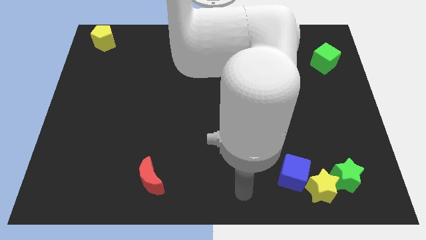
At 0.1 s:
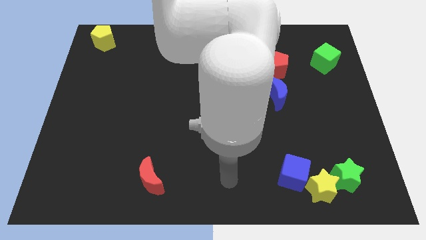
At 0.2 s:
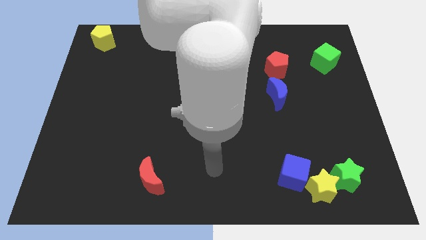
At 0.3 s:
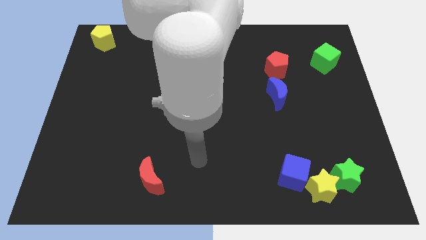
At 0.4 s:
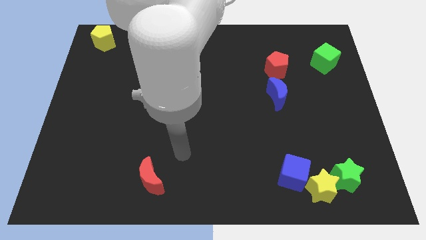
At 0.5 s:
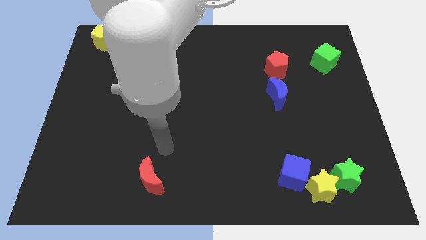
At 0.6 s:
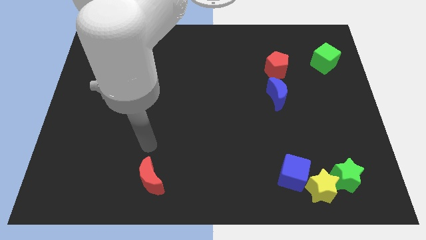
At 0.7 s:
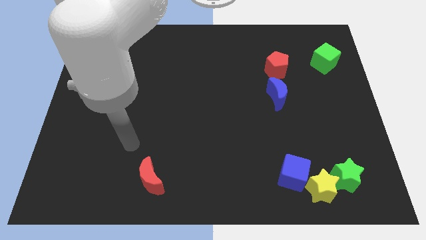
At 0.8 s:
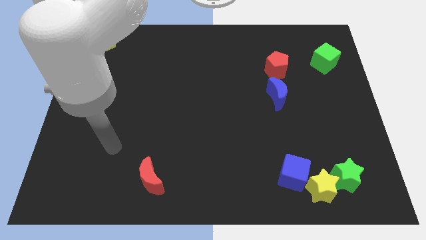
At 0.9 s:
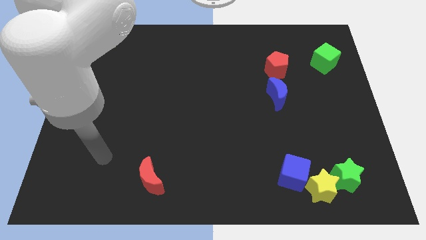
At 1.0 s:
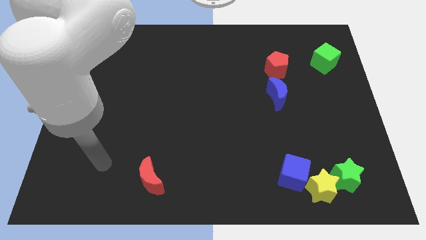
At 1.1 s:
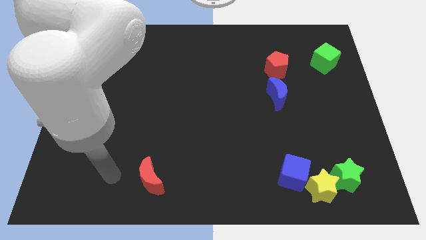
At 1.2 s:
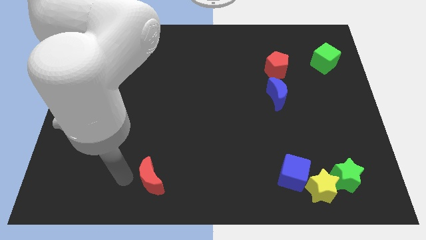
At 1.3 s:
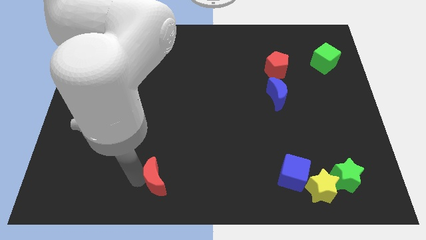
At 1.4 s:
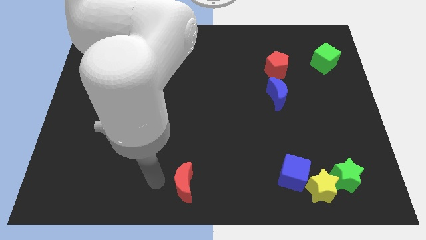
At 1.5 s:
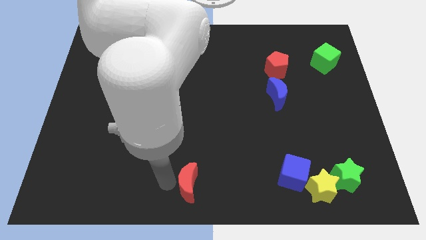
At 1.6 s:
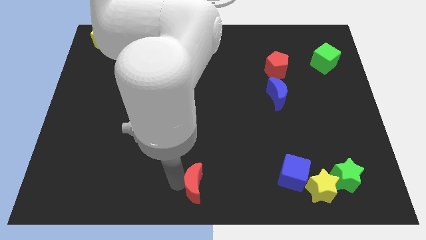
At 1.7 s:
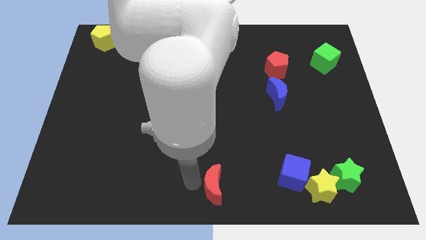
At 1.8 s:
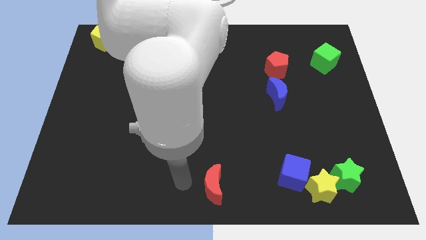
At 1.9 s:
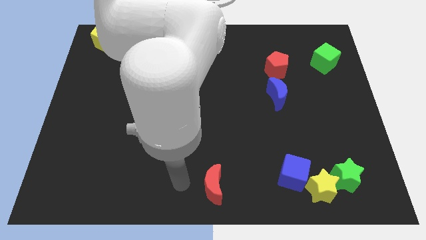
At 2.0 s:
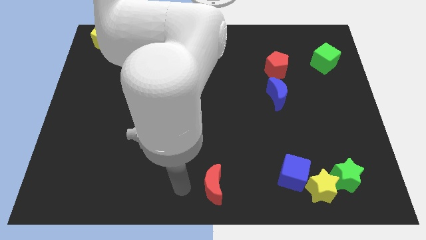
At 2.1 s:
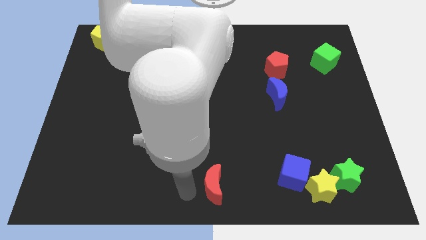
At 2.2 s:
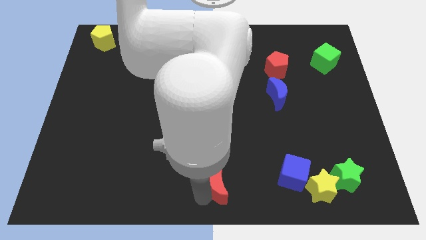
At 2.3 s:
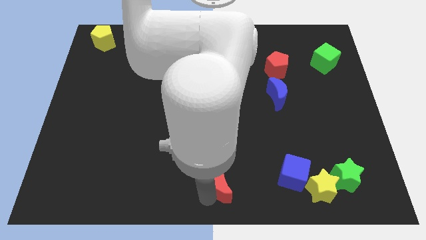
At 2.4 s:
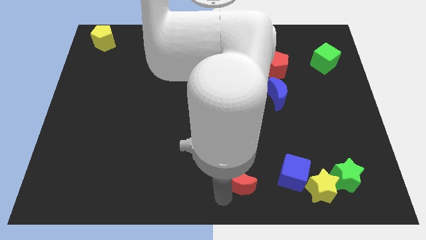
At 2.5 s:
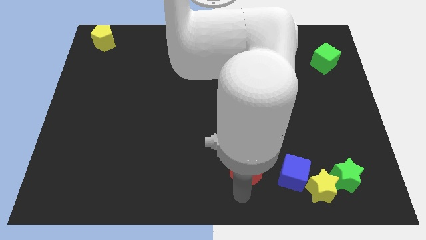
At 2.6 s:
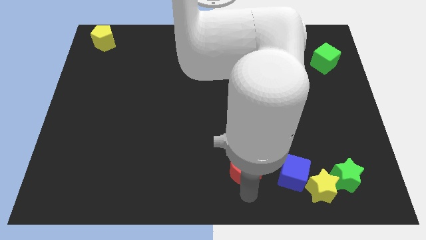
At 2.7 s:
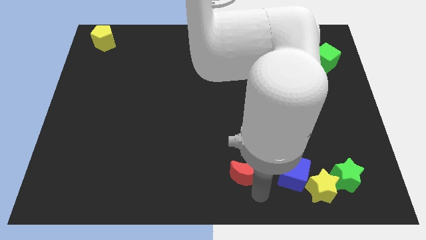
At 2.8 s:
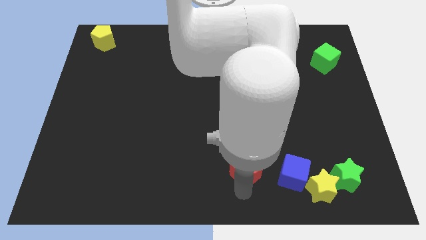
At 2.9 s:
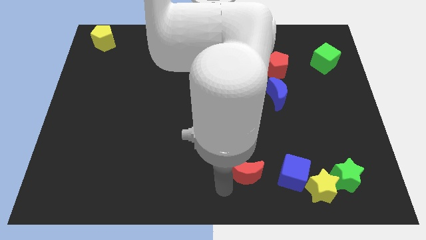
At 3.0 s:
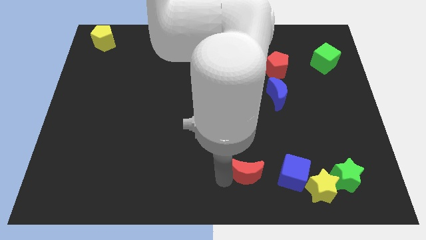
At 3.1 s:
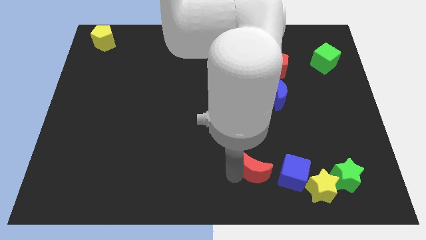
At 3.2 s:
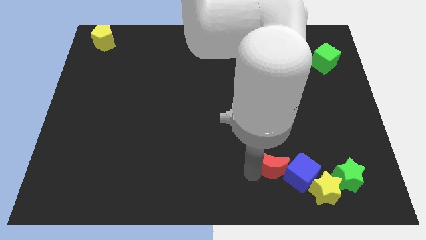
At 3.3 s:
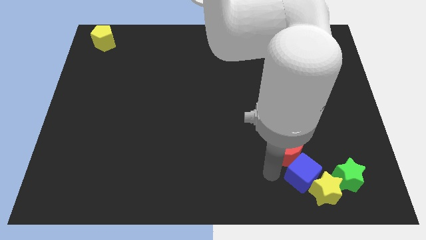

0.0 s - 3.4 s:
push the red crescen tinto the left side of he blue cube

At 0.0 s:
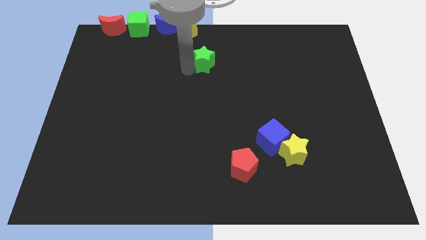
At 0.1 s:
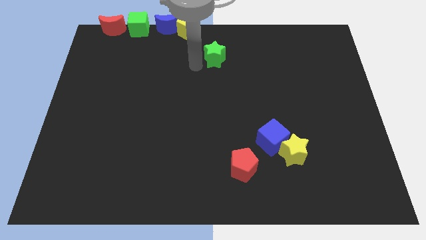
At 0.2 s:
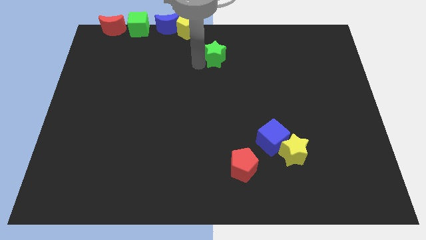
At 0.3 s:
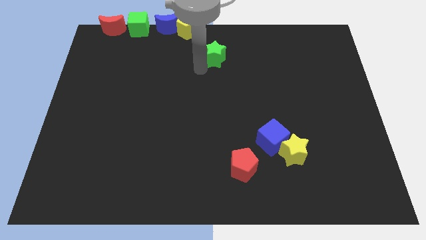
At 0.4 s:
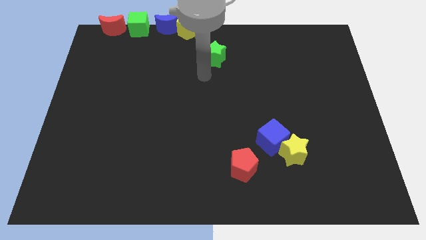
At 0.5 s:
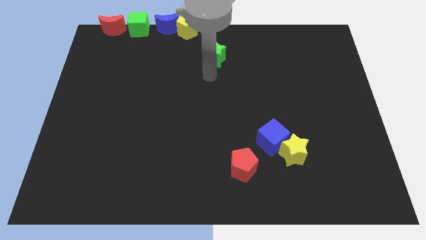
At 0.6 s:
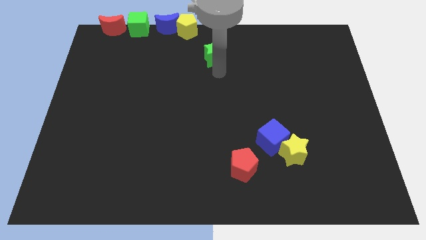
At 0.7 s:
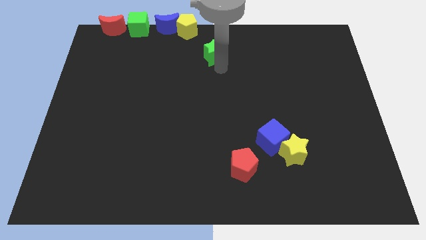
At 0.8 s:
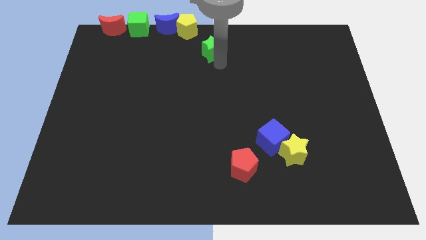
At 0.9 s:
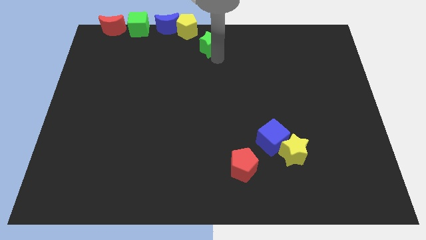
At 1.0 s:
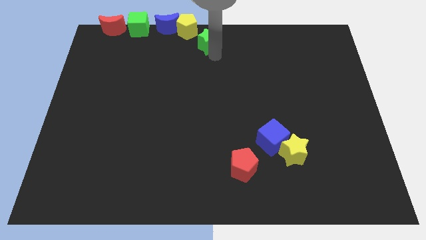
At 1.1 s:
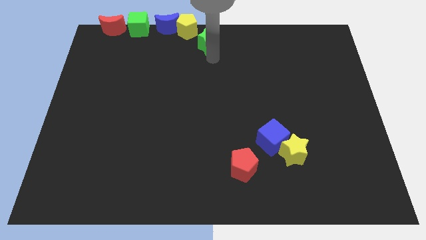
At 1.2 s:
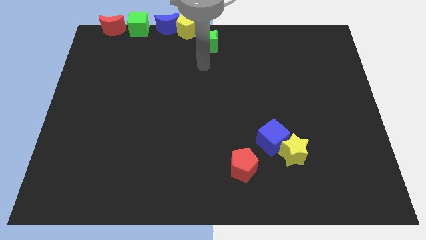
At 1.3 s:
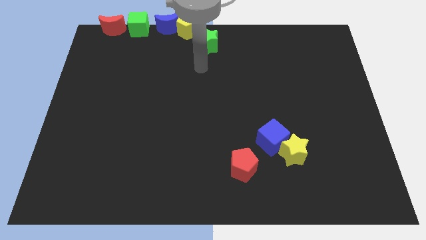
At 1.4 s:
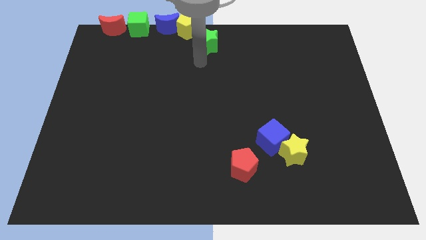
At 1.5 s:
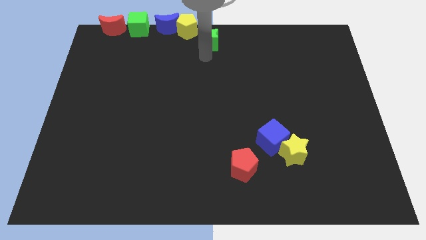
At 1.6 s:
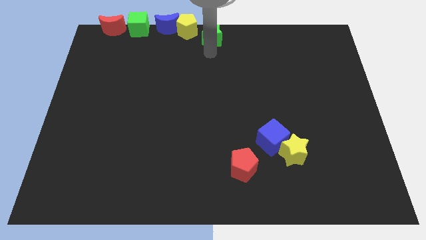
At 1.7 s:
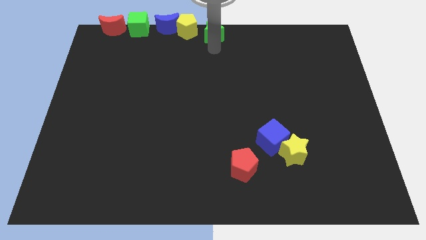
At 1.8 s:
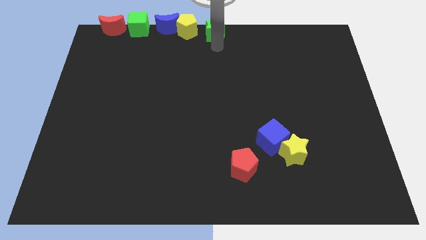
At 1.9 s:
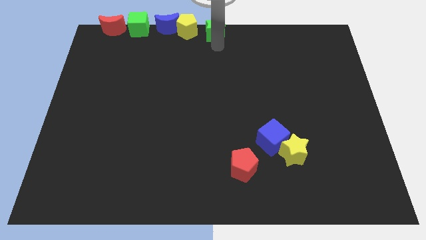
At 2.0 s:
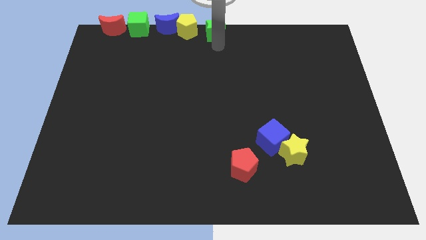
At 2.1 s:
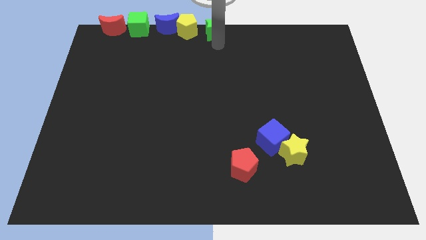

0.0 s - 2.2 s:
move the green star to the right of the yellow pentagon

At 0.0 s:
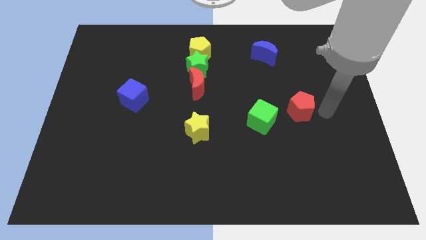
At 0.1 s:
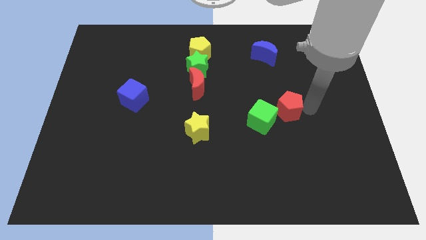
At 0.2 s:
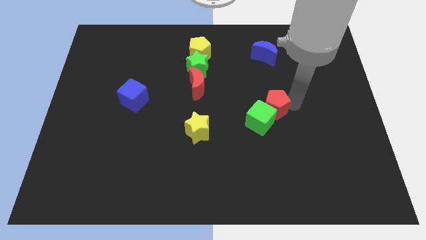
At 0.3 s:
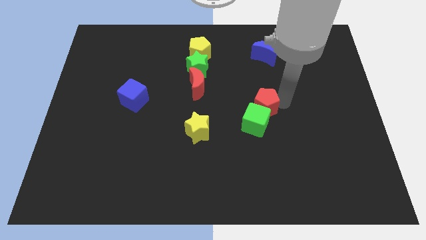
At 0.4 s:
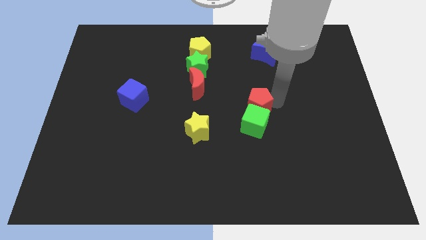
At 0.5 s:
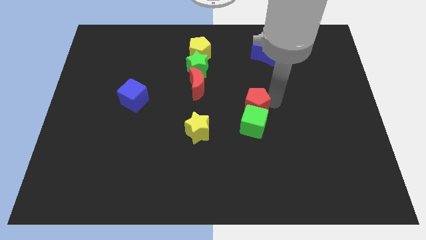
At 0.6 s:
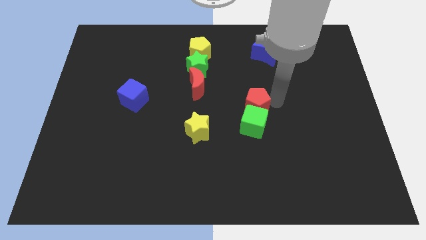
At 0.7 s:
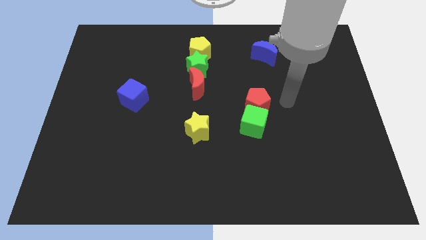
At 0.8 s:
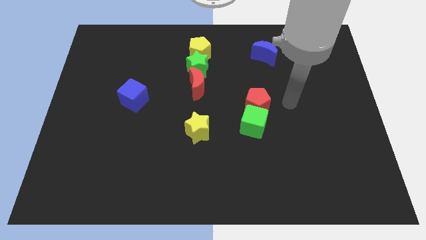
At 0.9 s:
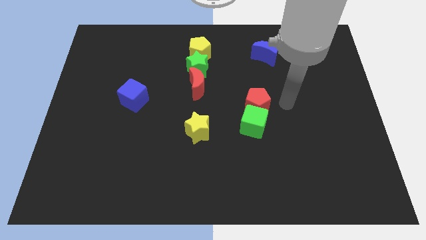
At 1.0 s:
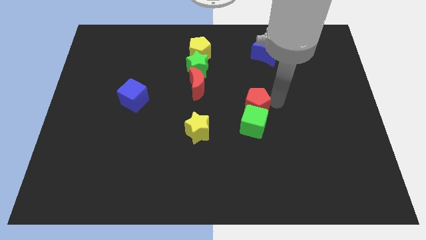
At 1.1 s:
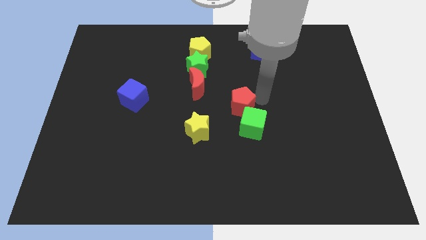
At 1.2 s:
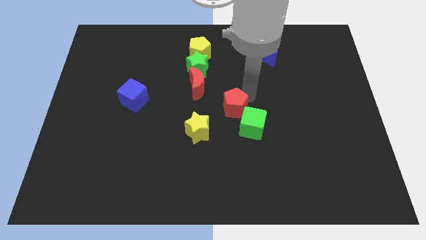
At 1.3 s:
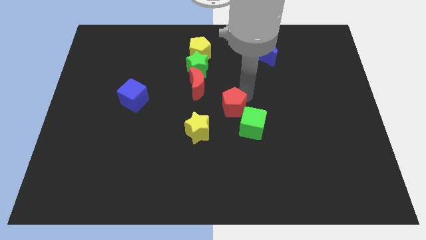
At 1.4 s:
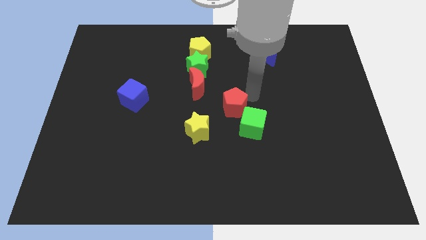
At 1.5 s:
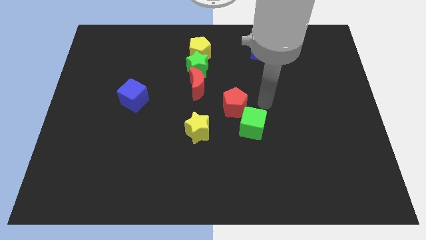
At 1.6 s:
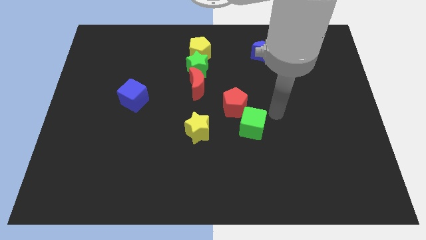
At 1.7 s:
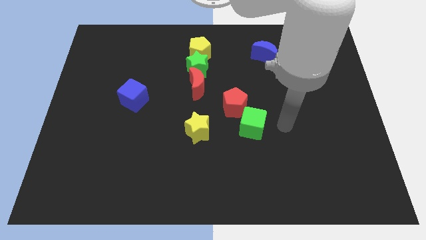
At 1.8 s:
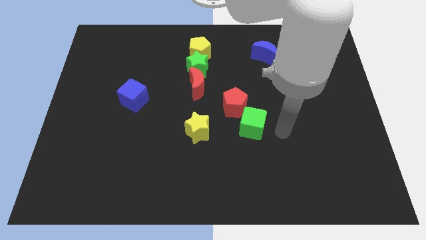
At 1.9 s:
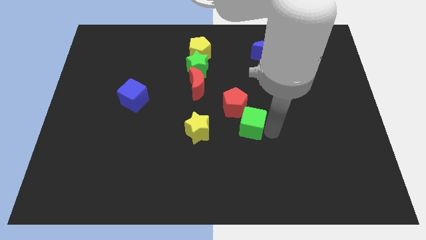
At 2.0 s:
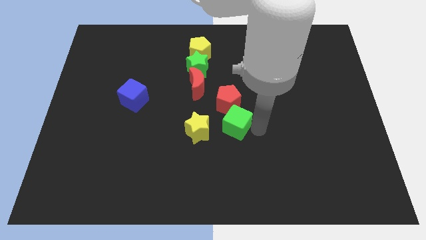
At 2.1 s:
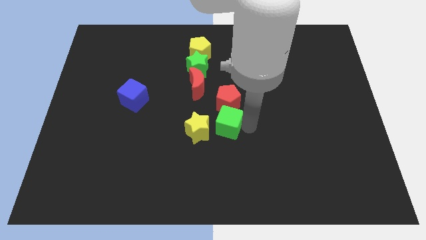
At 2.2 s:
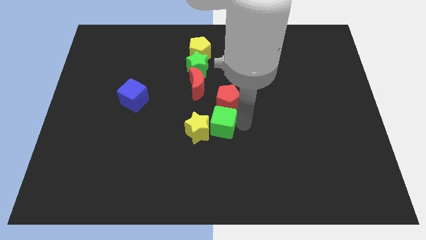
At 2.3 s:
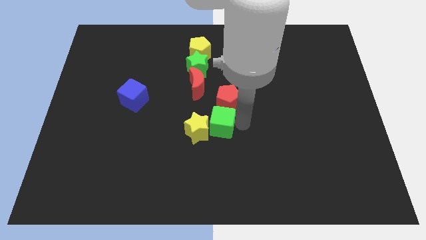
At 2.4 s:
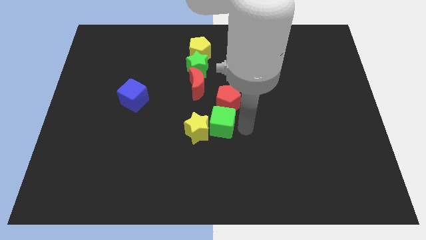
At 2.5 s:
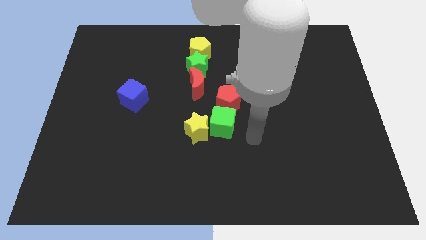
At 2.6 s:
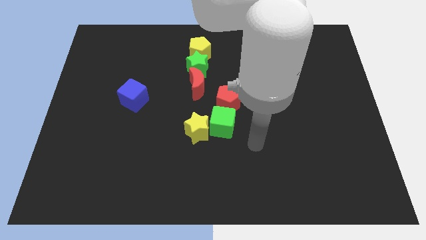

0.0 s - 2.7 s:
drag red pentagon towards left side of the board

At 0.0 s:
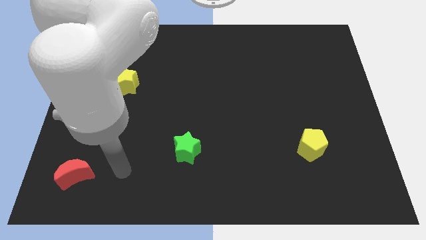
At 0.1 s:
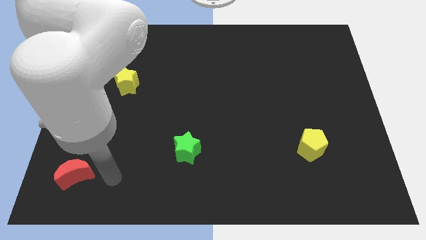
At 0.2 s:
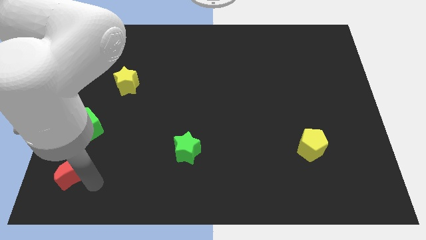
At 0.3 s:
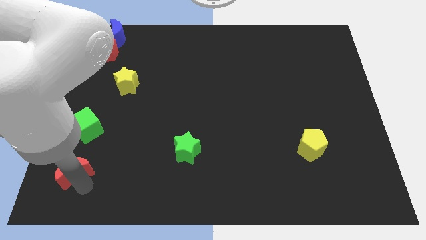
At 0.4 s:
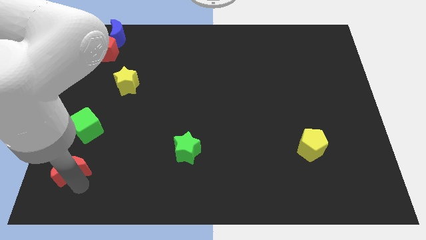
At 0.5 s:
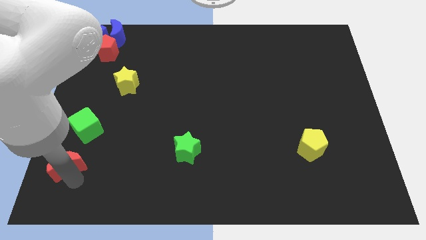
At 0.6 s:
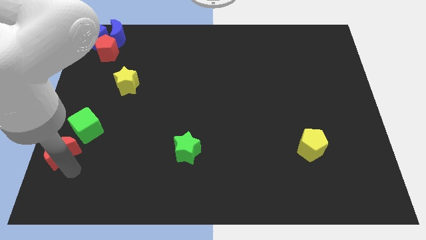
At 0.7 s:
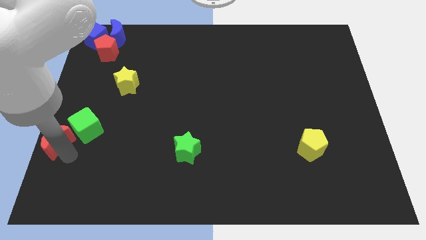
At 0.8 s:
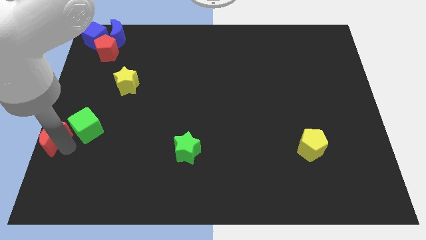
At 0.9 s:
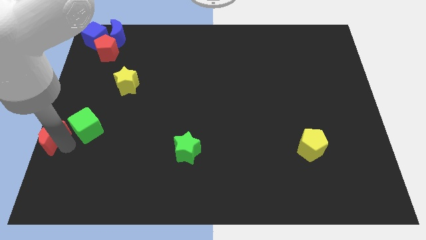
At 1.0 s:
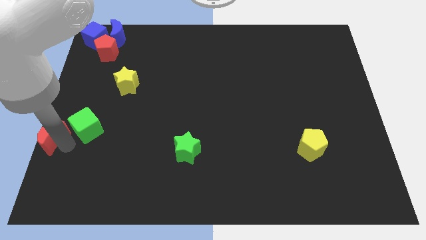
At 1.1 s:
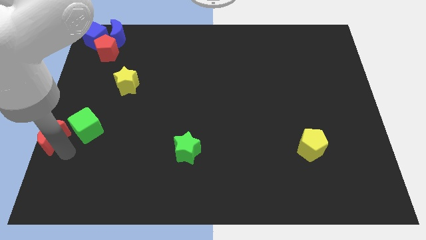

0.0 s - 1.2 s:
push the red crescent to the left of the green cube
